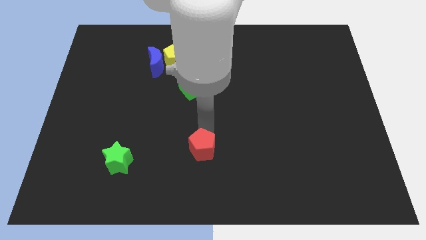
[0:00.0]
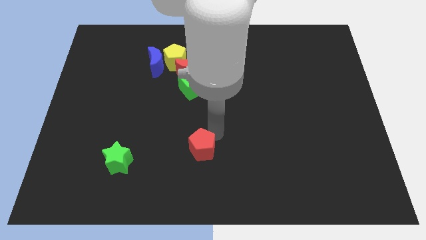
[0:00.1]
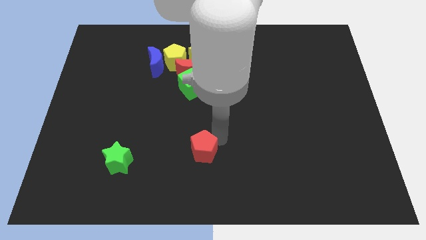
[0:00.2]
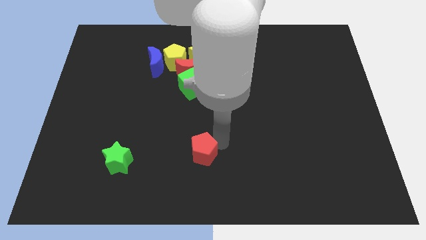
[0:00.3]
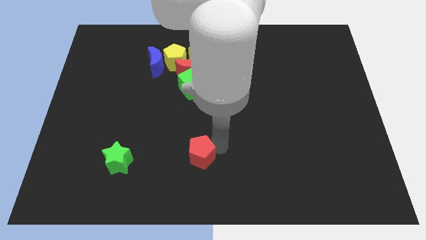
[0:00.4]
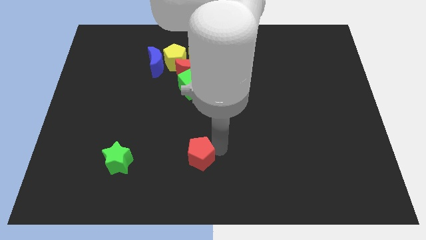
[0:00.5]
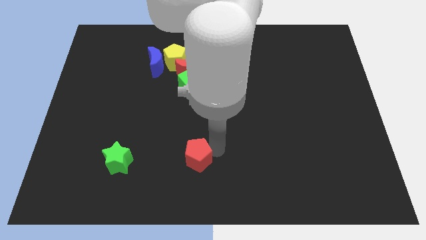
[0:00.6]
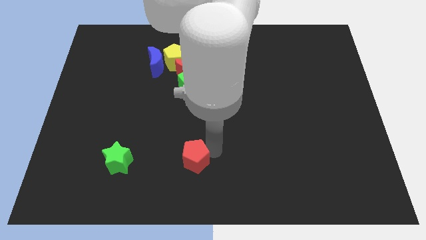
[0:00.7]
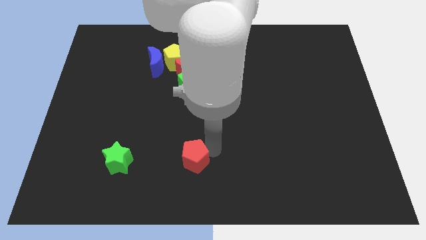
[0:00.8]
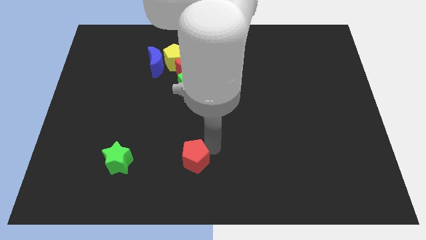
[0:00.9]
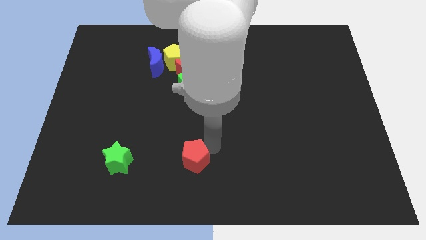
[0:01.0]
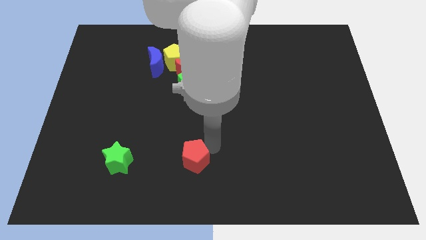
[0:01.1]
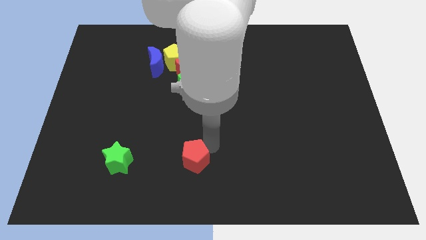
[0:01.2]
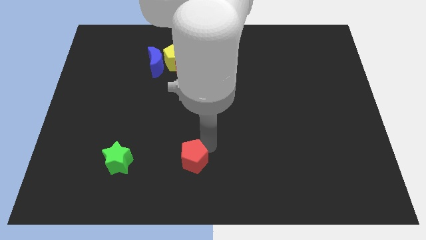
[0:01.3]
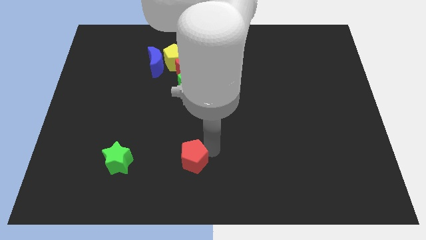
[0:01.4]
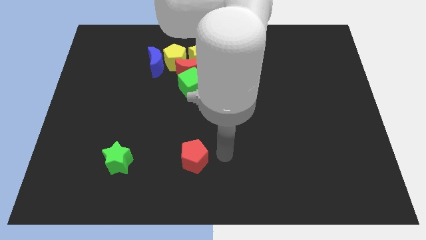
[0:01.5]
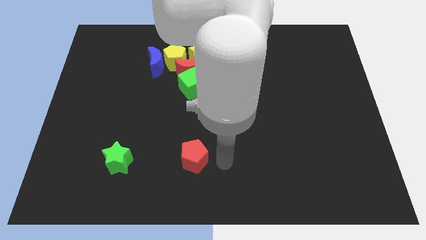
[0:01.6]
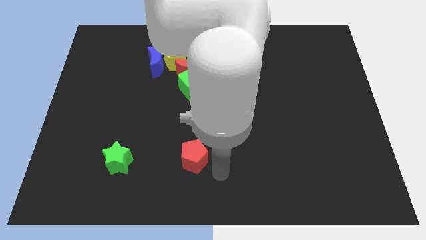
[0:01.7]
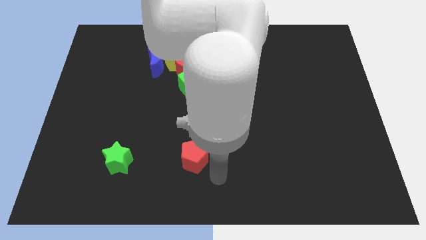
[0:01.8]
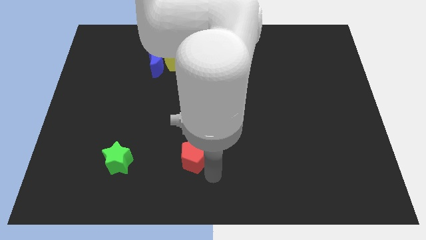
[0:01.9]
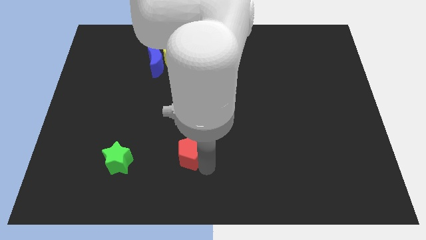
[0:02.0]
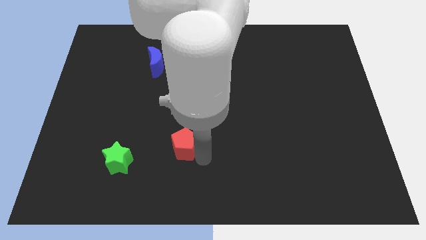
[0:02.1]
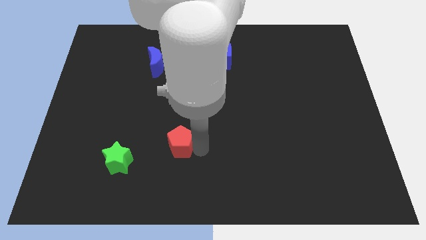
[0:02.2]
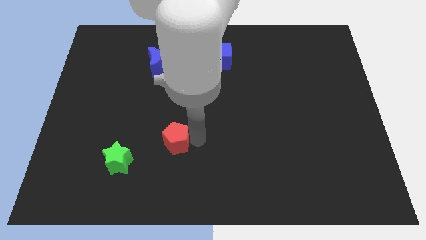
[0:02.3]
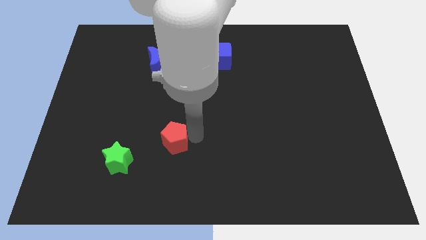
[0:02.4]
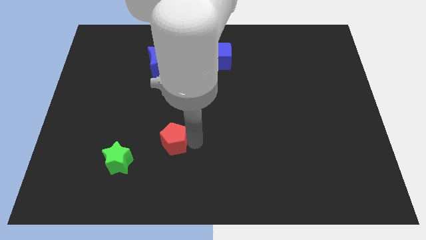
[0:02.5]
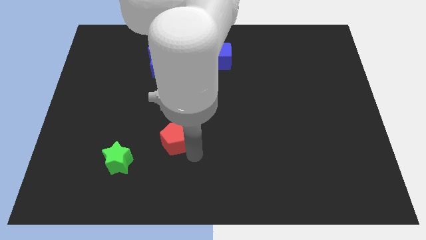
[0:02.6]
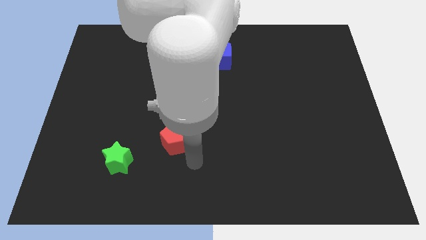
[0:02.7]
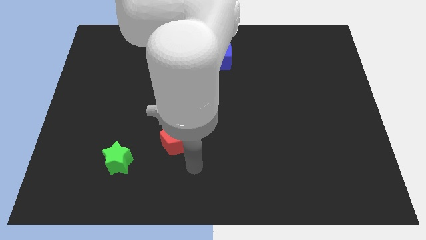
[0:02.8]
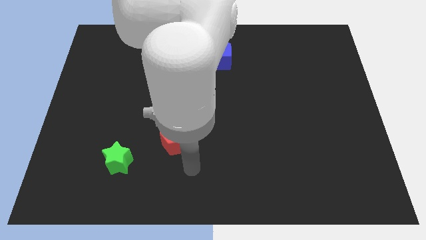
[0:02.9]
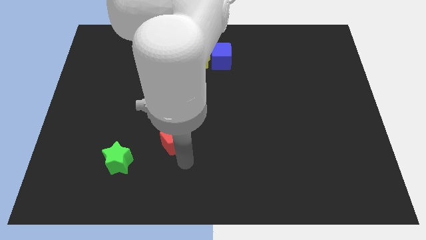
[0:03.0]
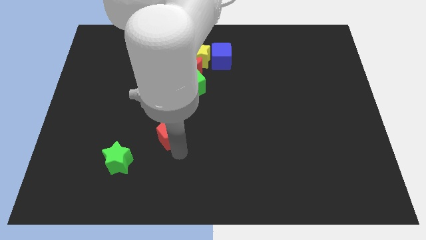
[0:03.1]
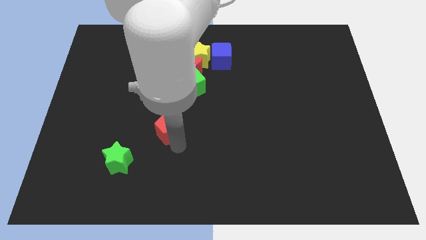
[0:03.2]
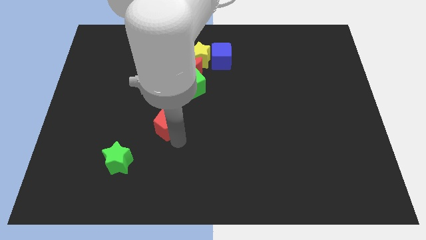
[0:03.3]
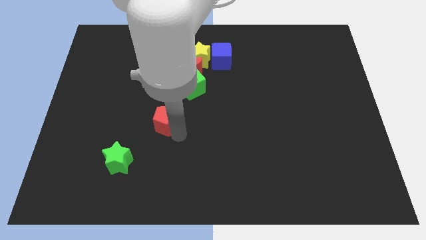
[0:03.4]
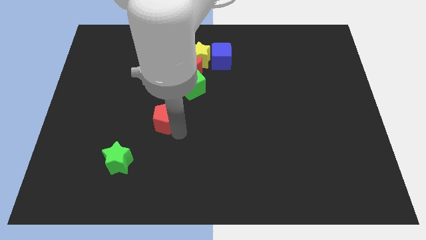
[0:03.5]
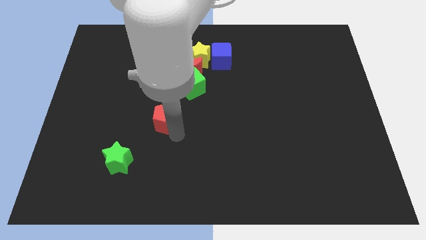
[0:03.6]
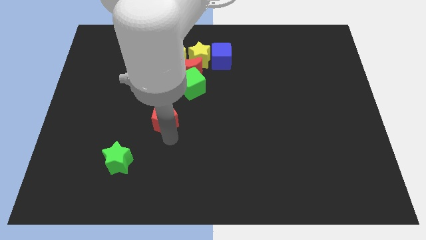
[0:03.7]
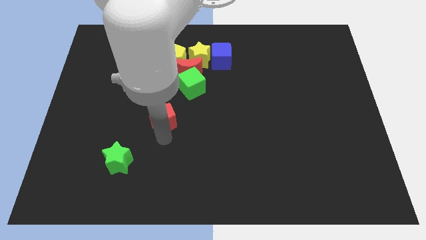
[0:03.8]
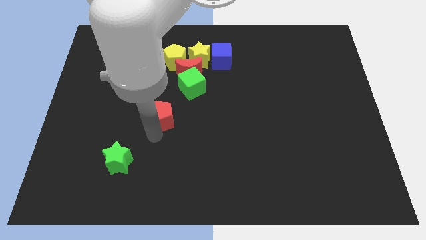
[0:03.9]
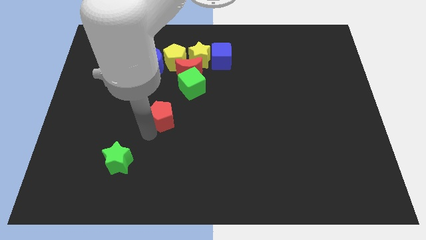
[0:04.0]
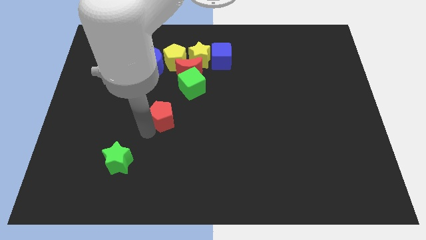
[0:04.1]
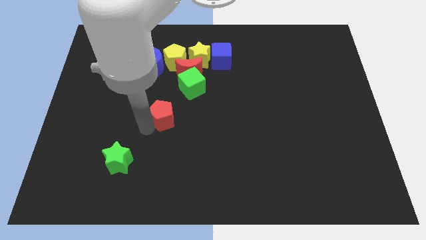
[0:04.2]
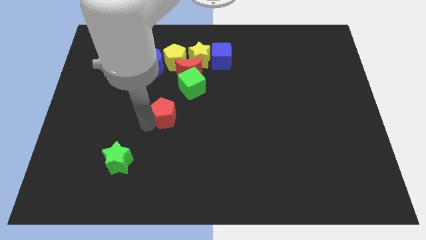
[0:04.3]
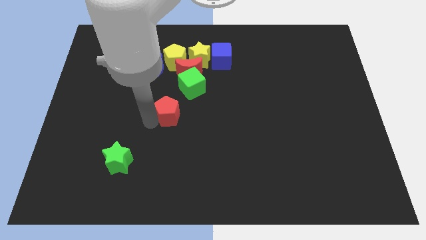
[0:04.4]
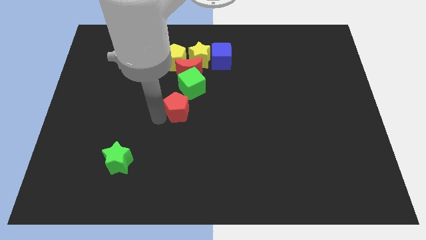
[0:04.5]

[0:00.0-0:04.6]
place the red pentagon in between green star and cube

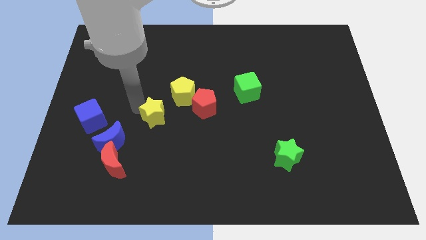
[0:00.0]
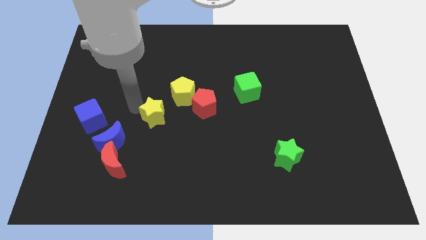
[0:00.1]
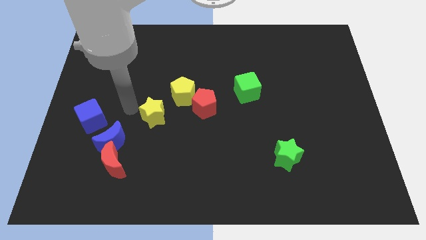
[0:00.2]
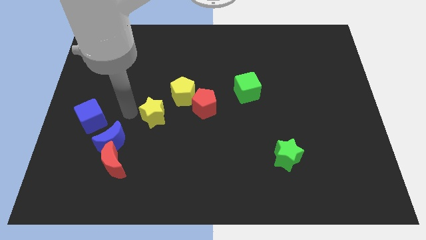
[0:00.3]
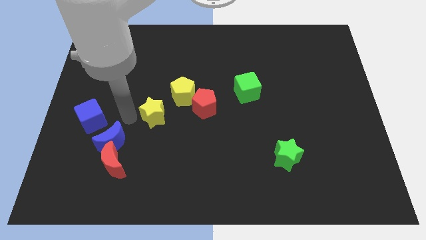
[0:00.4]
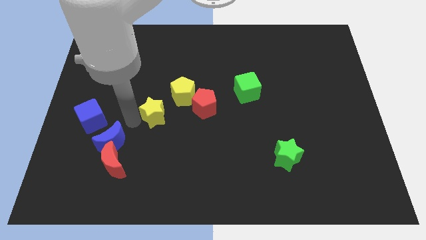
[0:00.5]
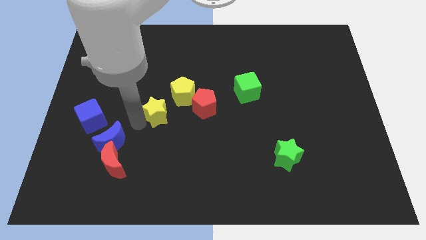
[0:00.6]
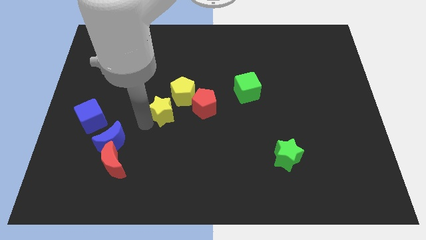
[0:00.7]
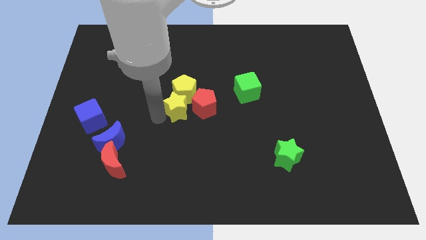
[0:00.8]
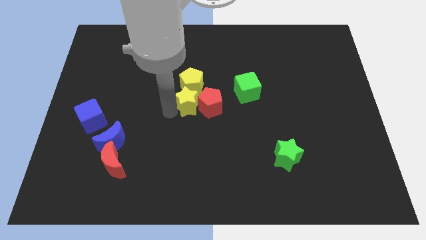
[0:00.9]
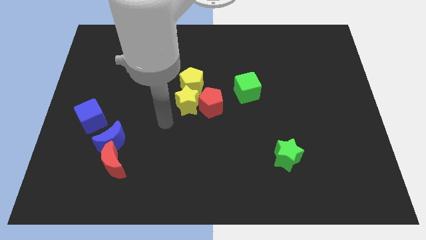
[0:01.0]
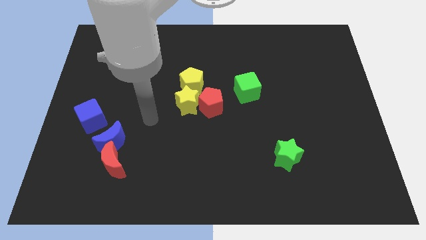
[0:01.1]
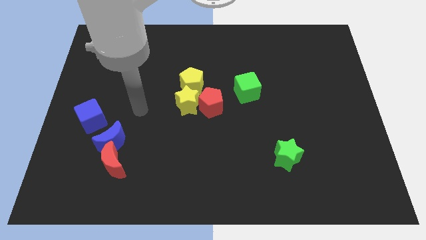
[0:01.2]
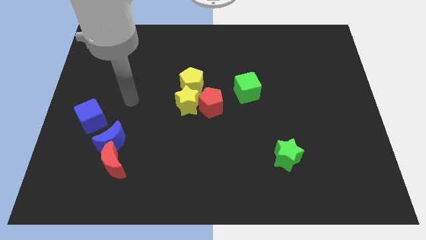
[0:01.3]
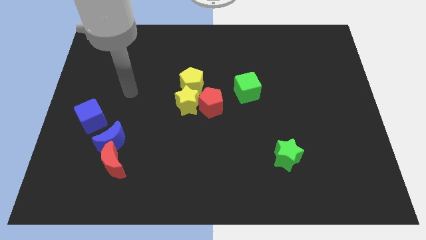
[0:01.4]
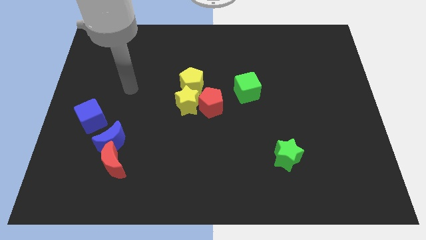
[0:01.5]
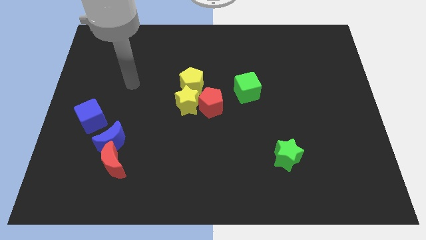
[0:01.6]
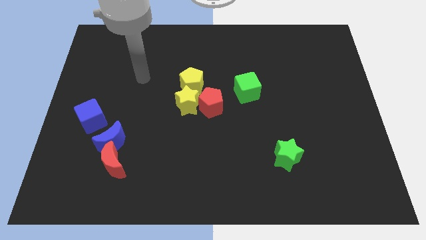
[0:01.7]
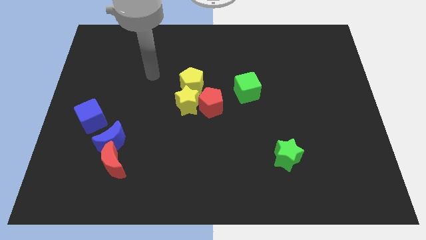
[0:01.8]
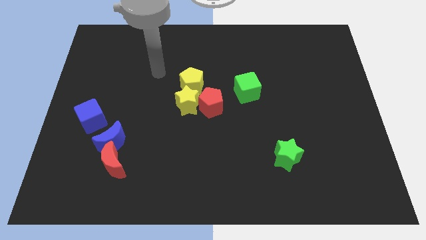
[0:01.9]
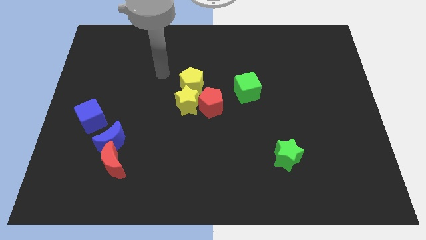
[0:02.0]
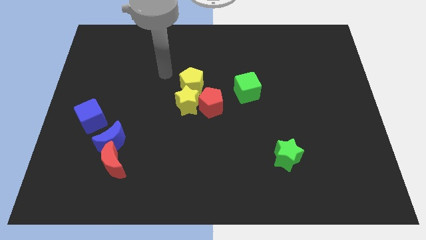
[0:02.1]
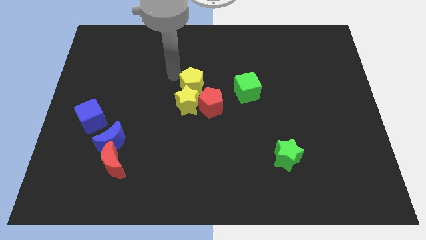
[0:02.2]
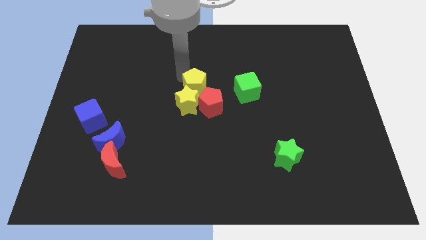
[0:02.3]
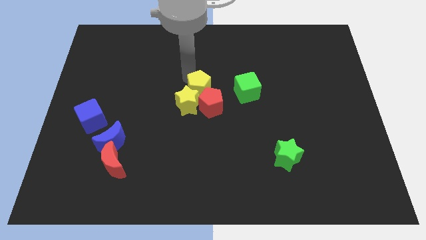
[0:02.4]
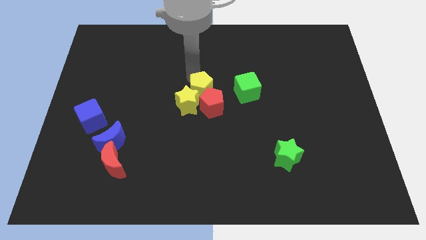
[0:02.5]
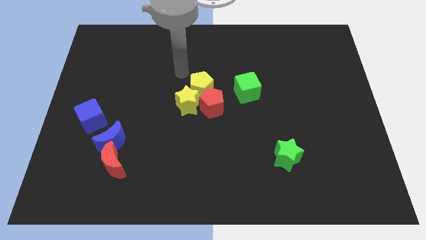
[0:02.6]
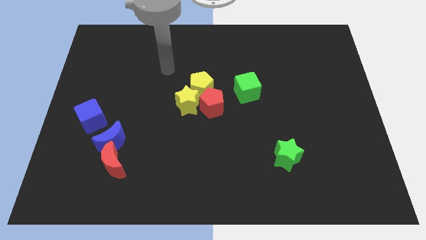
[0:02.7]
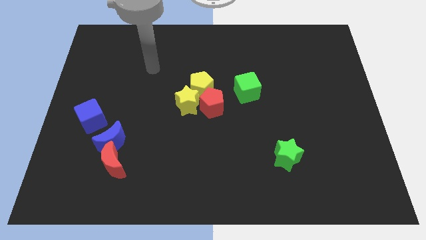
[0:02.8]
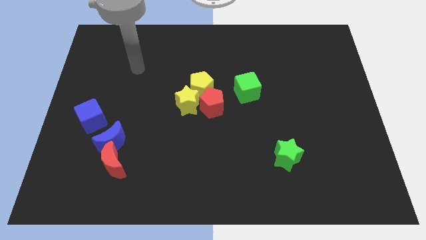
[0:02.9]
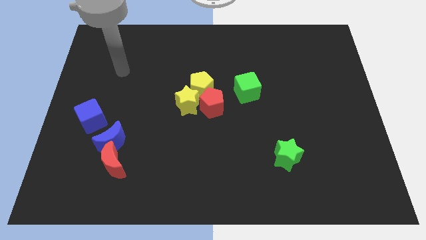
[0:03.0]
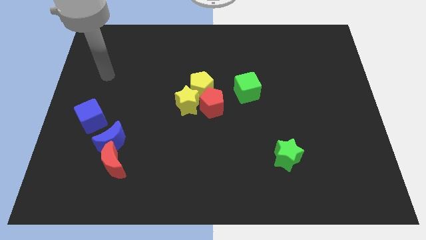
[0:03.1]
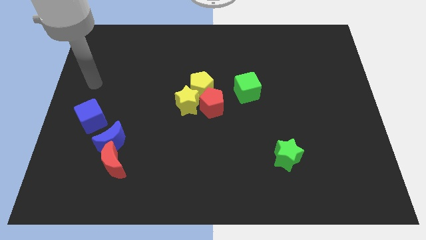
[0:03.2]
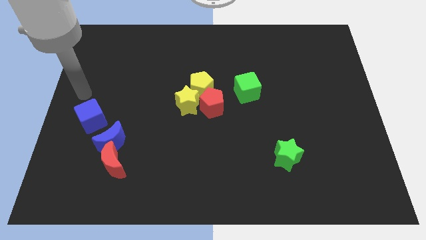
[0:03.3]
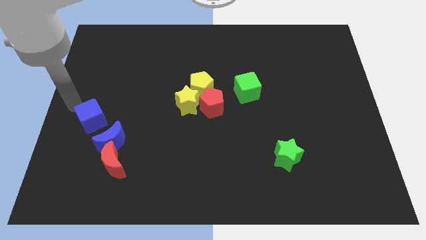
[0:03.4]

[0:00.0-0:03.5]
move the yellow blocks to the center

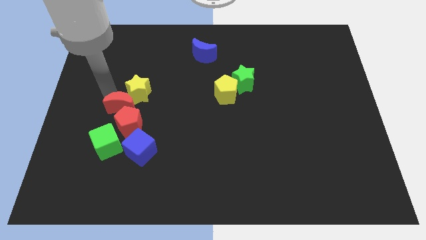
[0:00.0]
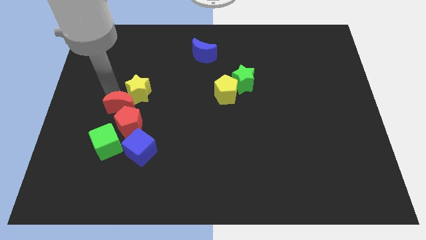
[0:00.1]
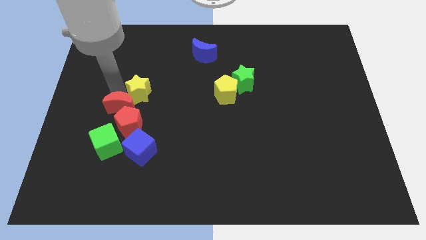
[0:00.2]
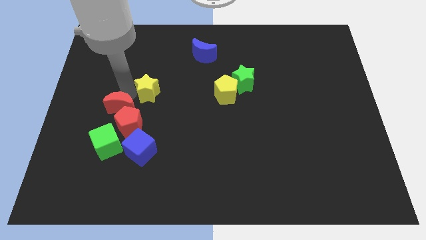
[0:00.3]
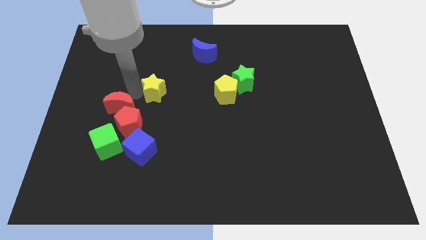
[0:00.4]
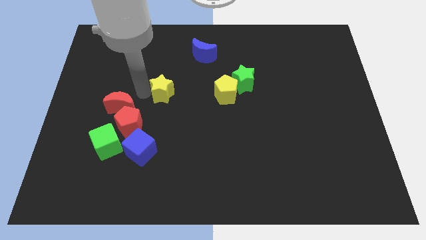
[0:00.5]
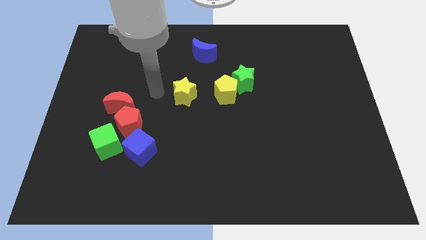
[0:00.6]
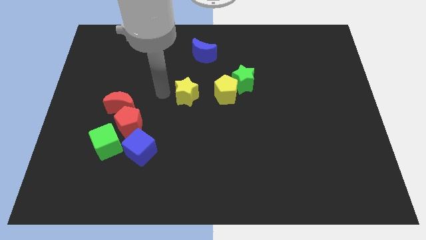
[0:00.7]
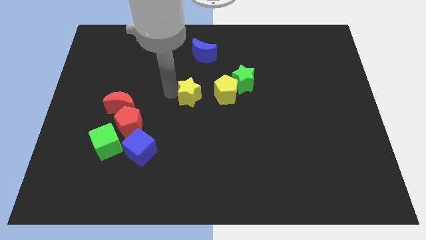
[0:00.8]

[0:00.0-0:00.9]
push the yellow star closer to the yellow pentagon

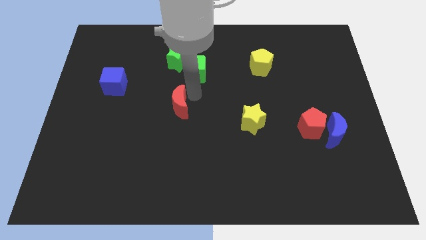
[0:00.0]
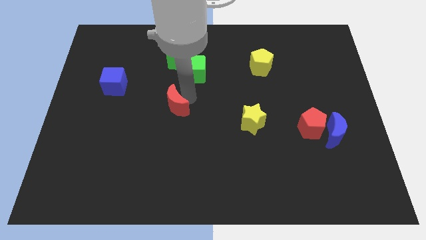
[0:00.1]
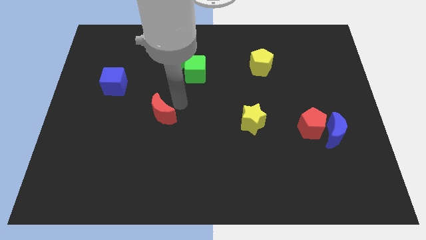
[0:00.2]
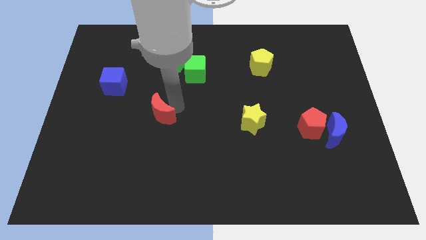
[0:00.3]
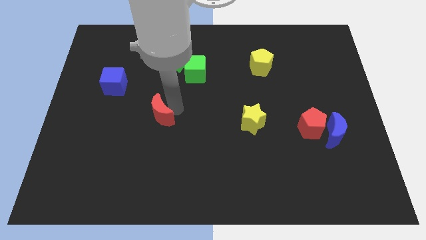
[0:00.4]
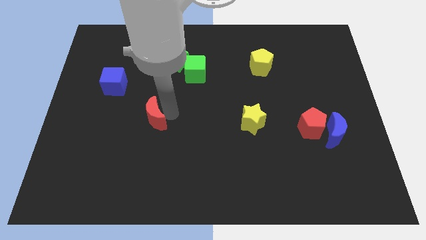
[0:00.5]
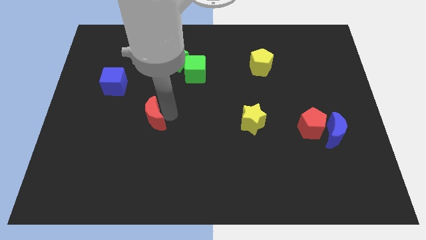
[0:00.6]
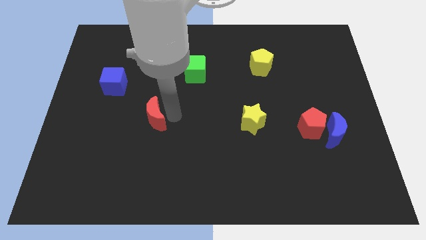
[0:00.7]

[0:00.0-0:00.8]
push the red crescent slightly to the left side of the board
